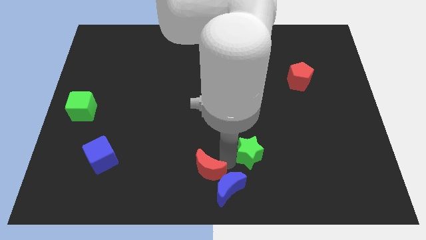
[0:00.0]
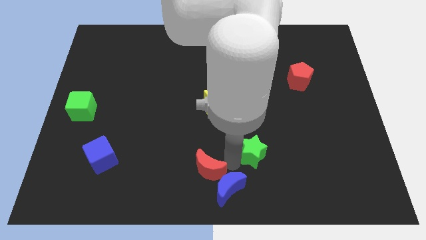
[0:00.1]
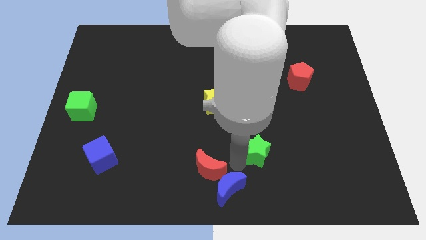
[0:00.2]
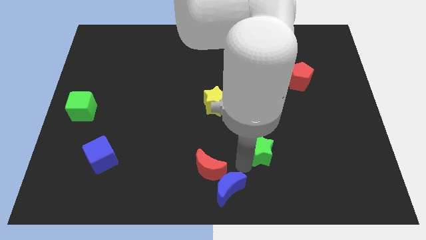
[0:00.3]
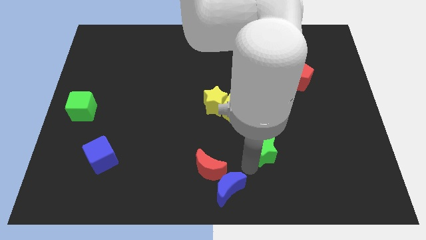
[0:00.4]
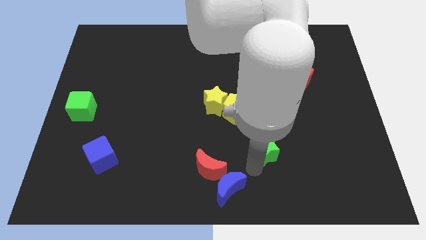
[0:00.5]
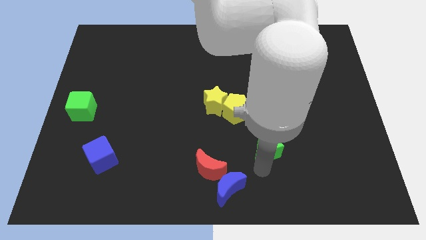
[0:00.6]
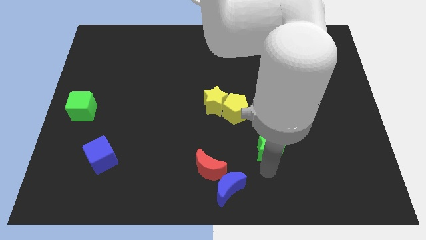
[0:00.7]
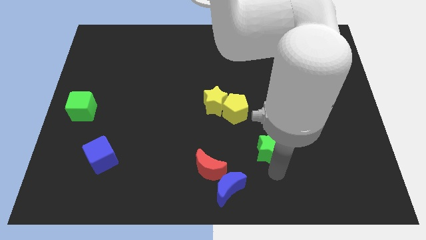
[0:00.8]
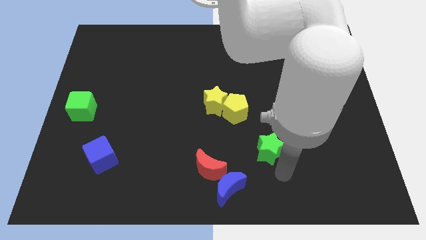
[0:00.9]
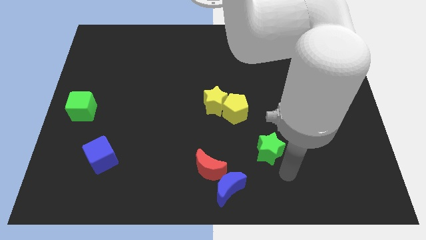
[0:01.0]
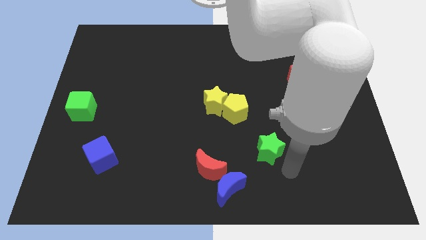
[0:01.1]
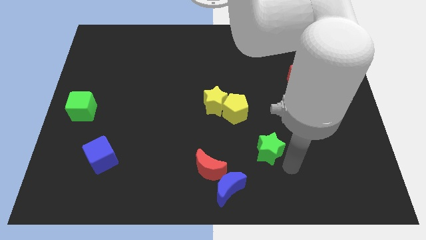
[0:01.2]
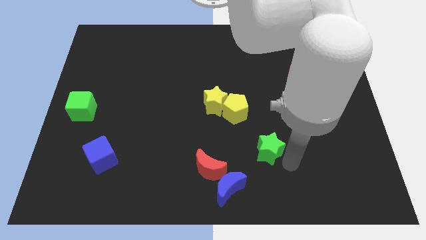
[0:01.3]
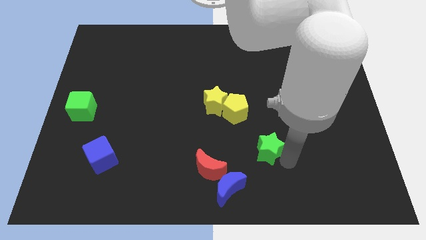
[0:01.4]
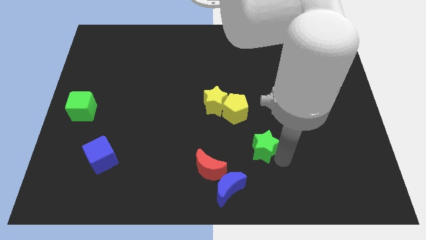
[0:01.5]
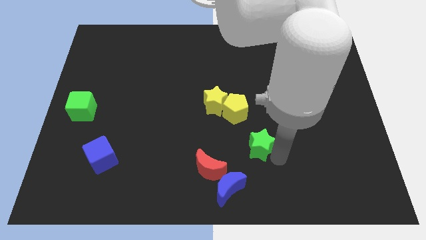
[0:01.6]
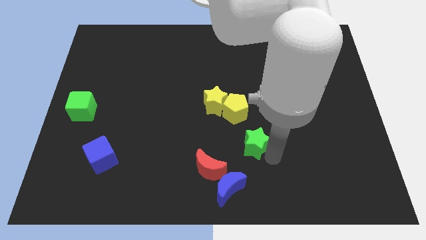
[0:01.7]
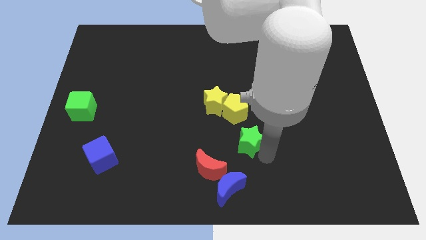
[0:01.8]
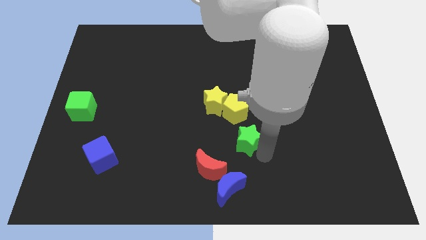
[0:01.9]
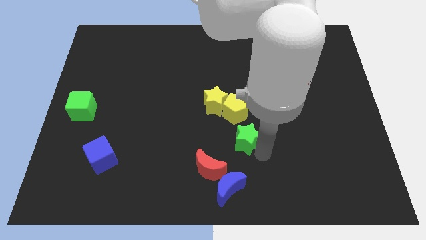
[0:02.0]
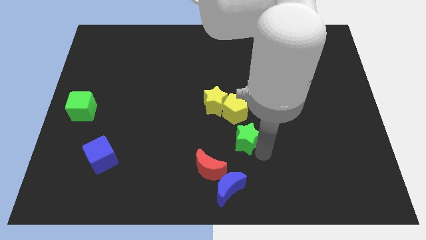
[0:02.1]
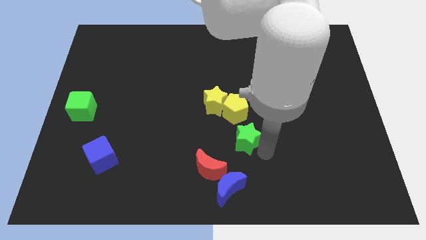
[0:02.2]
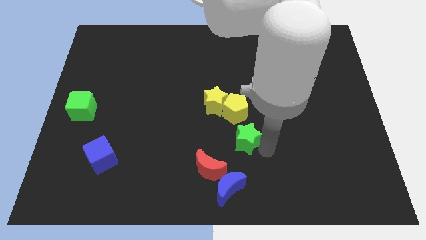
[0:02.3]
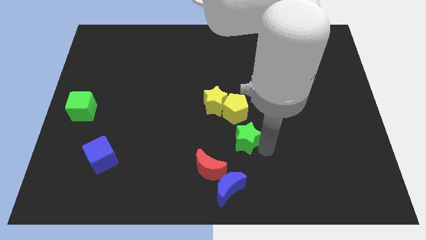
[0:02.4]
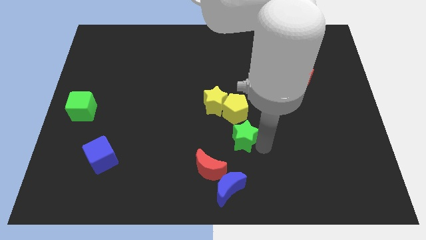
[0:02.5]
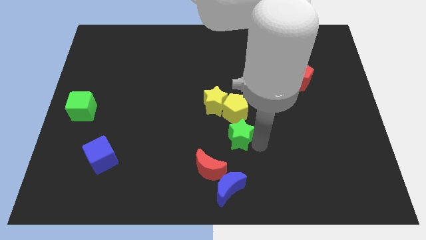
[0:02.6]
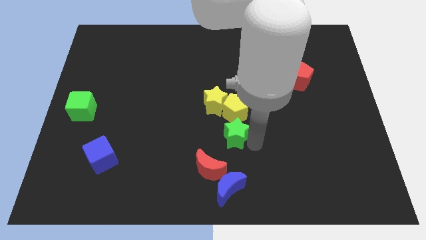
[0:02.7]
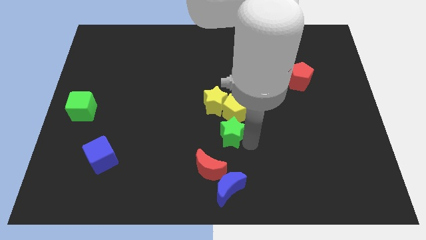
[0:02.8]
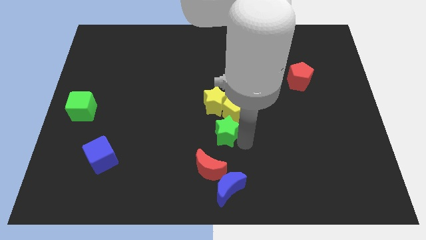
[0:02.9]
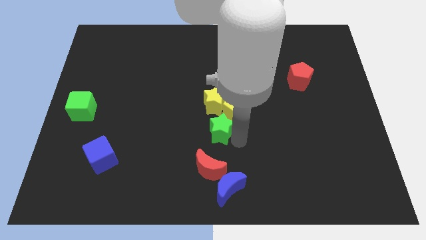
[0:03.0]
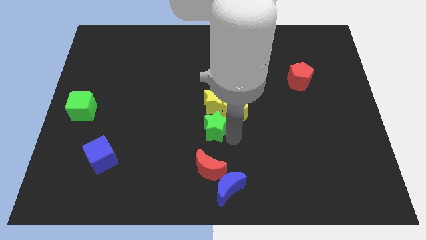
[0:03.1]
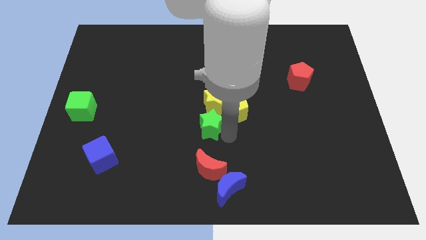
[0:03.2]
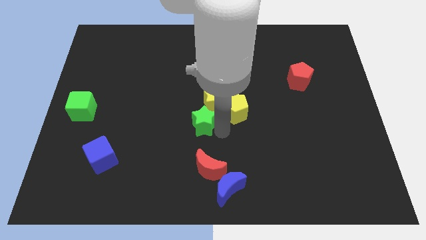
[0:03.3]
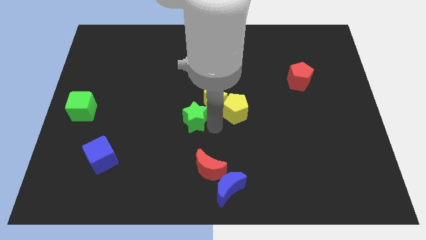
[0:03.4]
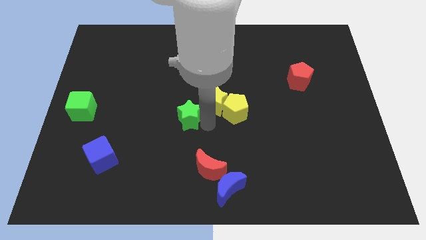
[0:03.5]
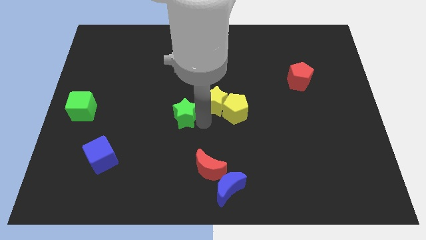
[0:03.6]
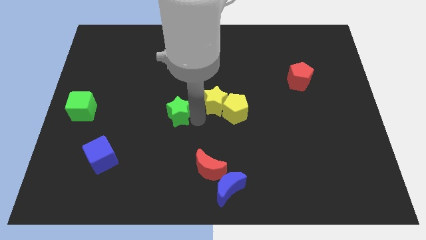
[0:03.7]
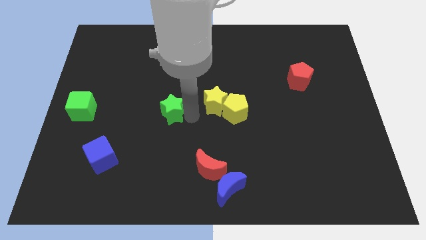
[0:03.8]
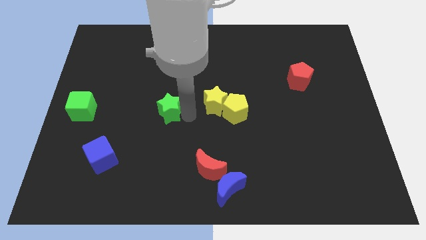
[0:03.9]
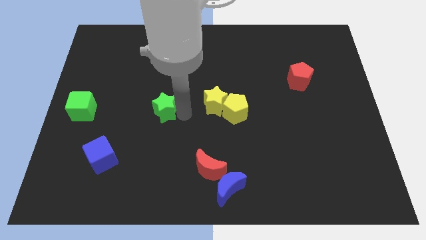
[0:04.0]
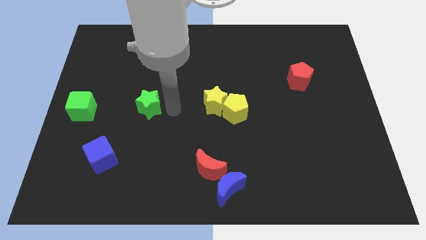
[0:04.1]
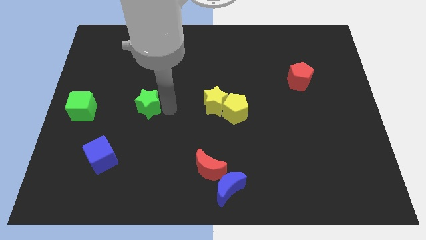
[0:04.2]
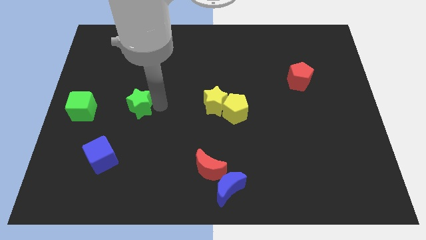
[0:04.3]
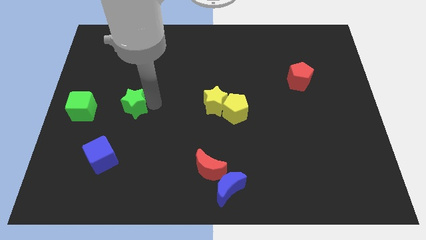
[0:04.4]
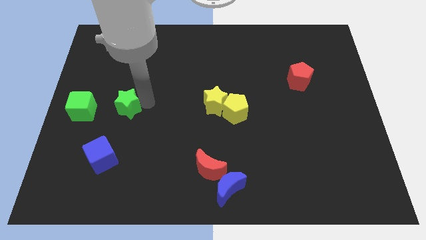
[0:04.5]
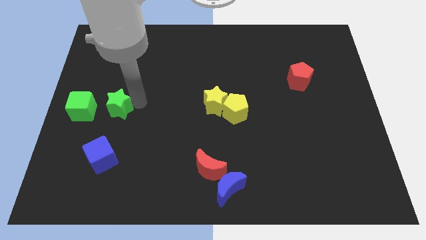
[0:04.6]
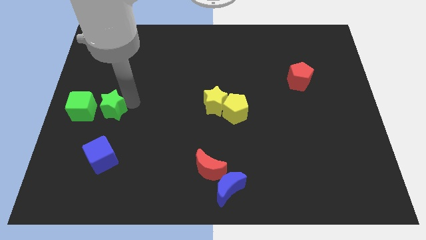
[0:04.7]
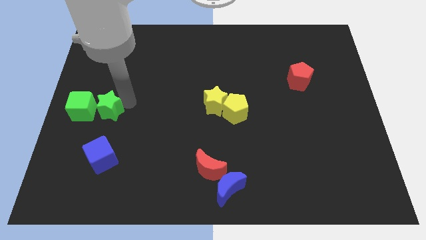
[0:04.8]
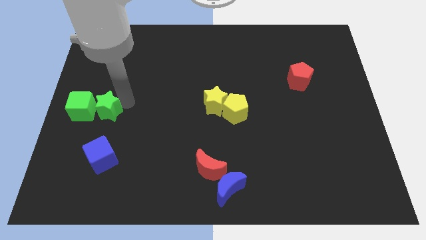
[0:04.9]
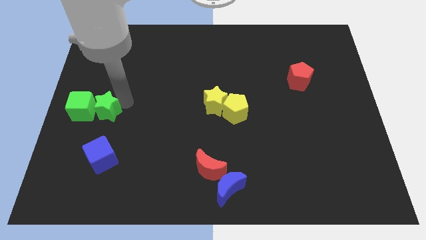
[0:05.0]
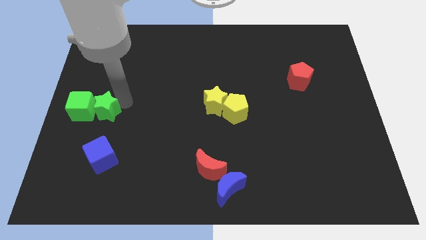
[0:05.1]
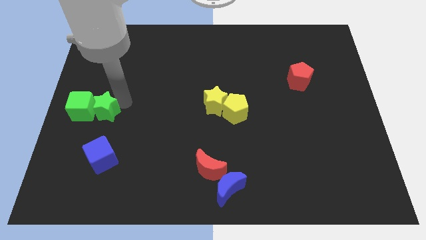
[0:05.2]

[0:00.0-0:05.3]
drag the green star close to the right side of the green cube

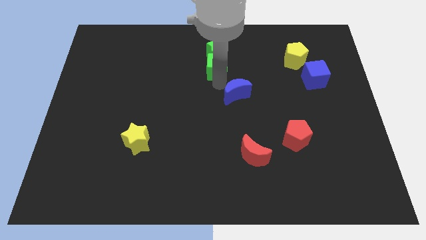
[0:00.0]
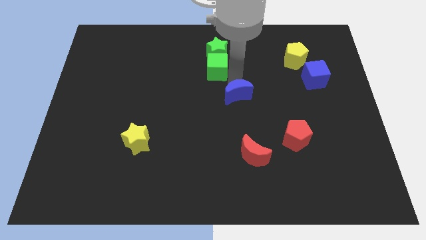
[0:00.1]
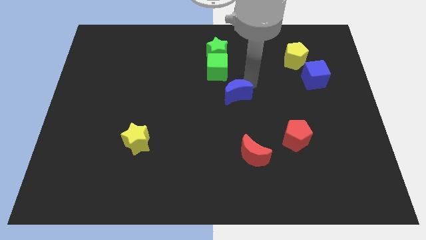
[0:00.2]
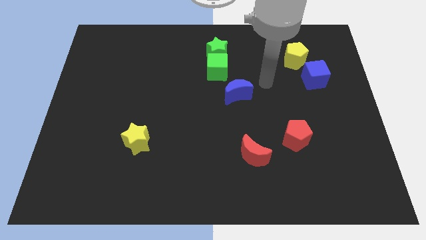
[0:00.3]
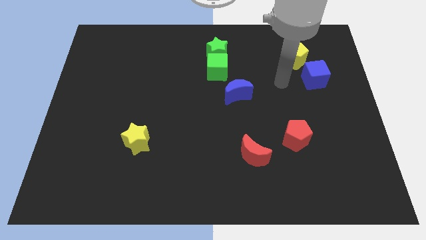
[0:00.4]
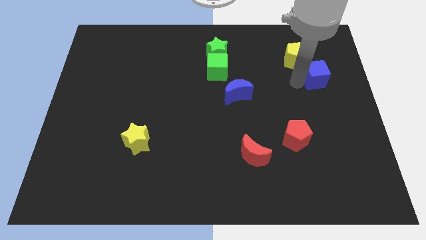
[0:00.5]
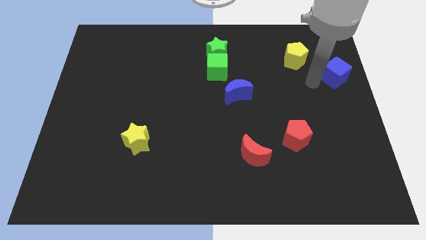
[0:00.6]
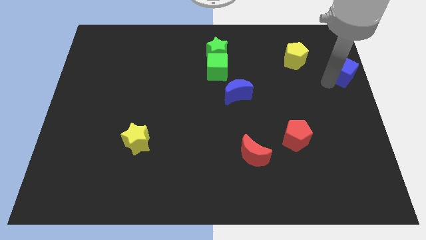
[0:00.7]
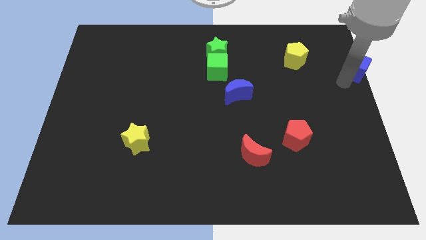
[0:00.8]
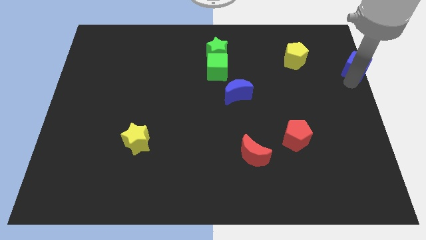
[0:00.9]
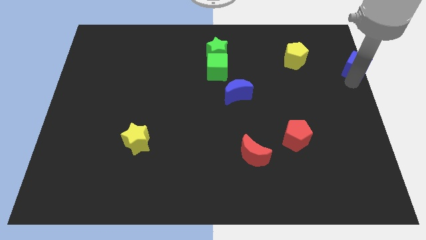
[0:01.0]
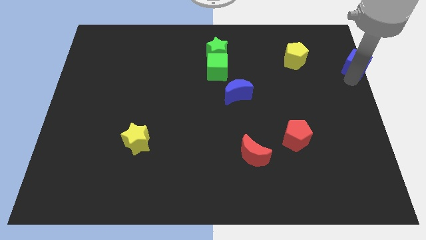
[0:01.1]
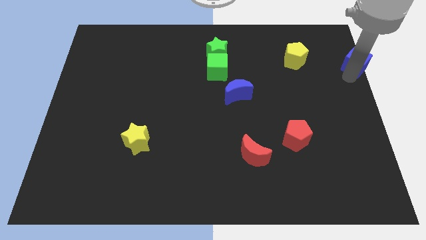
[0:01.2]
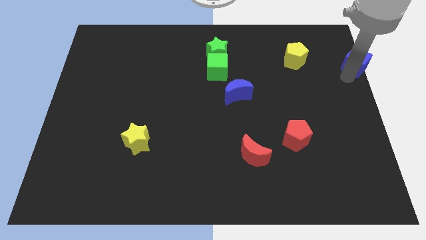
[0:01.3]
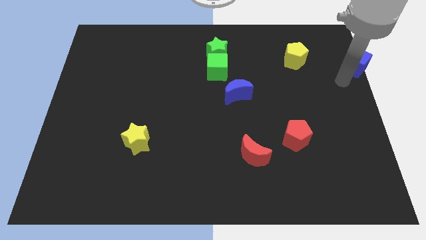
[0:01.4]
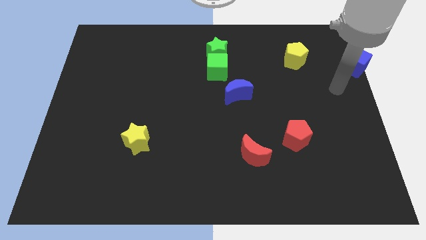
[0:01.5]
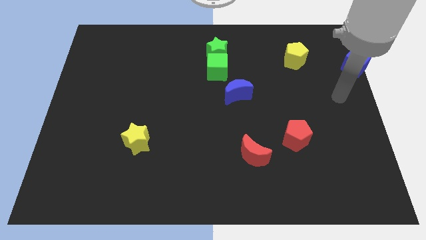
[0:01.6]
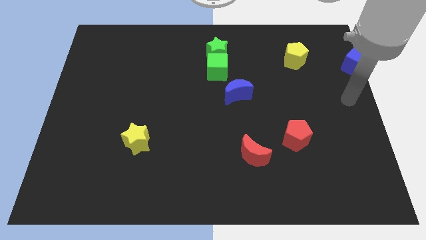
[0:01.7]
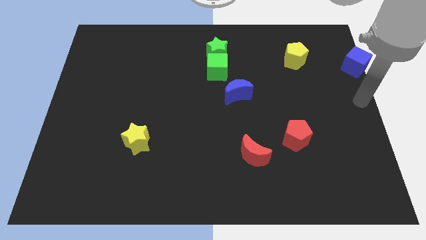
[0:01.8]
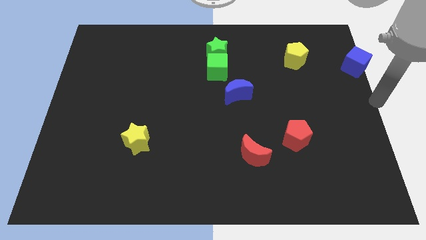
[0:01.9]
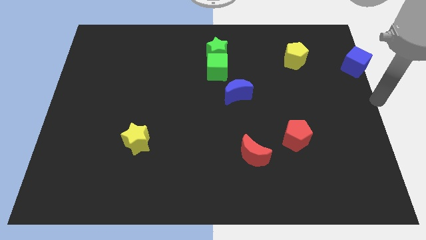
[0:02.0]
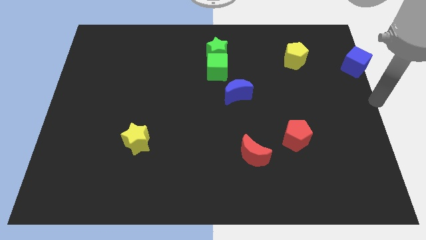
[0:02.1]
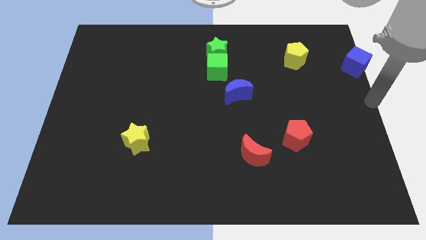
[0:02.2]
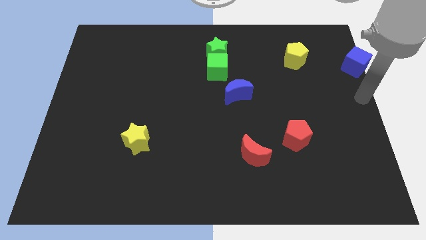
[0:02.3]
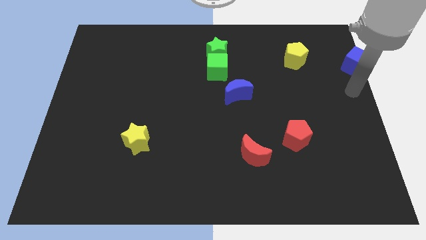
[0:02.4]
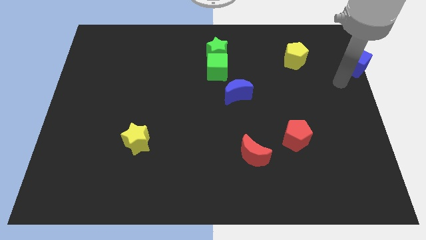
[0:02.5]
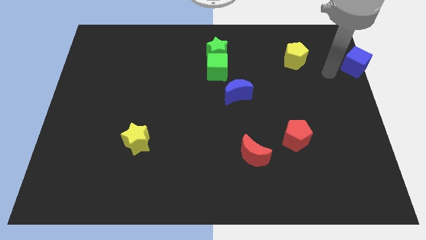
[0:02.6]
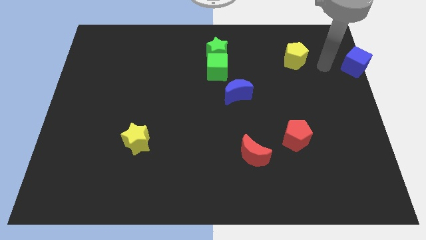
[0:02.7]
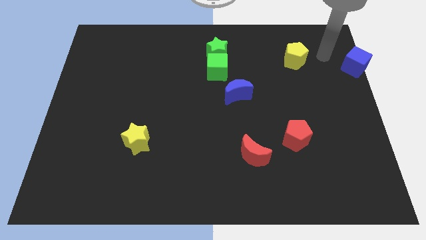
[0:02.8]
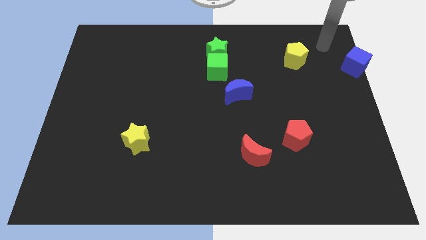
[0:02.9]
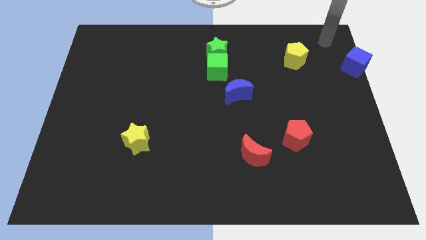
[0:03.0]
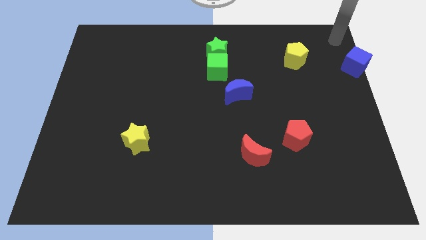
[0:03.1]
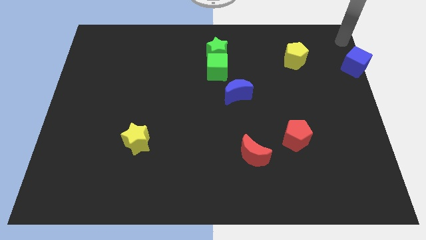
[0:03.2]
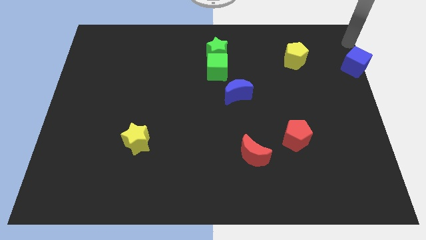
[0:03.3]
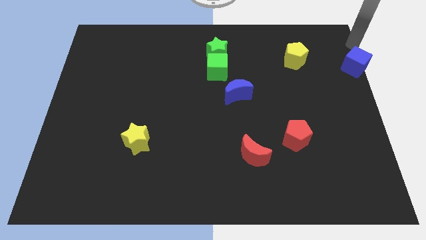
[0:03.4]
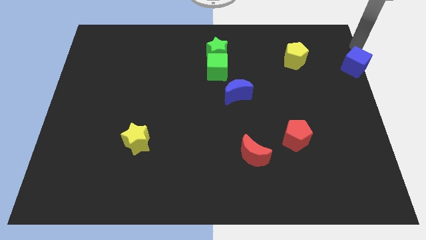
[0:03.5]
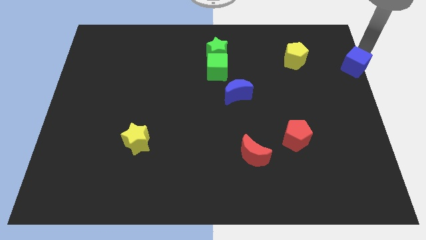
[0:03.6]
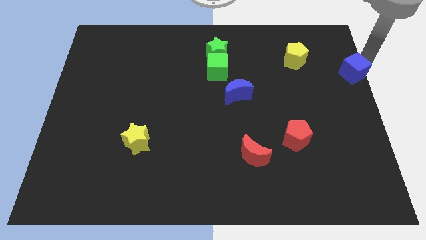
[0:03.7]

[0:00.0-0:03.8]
push the blue cube to the right of the yellow pentagon
